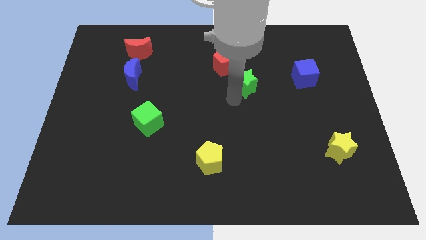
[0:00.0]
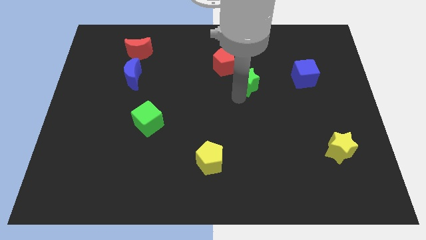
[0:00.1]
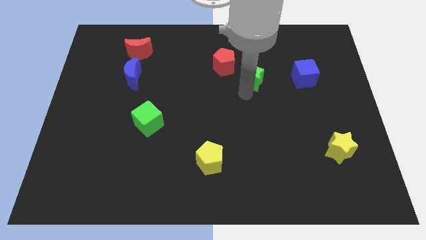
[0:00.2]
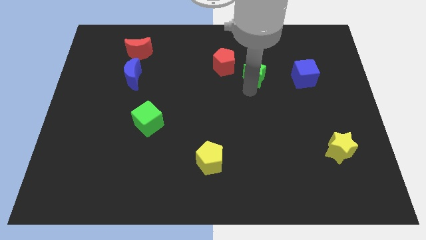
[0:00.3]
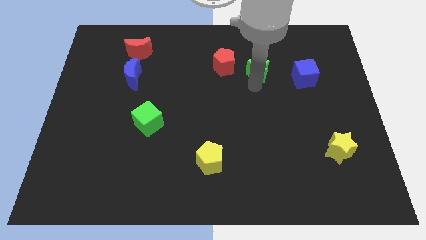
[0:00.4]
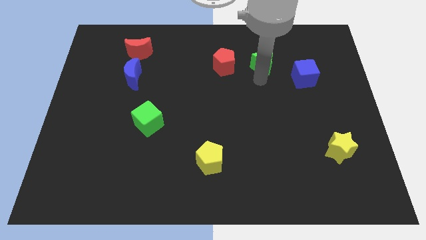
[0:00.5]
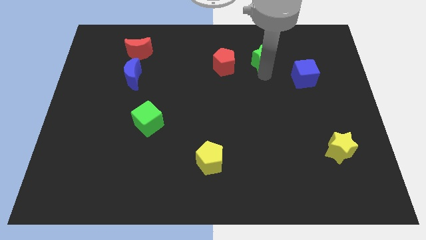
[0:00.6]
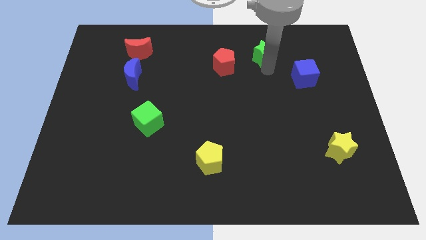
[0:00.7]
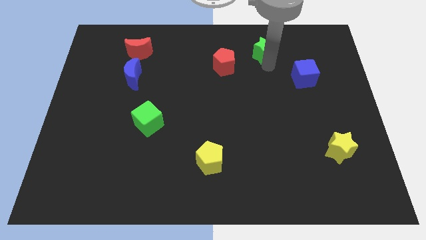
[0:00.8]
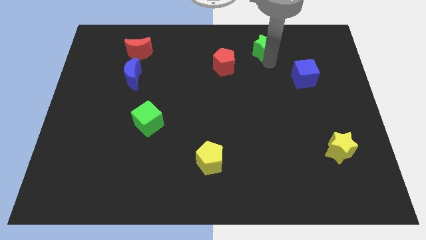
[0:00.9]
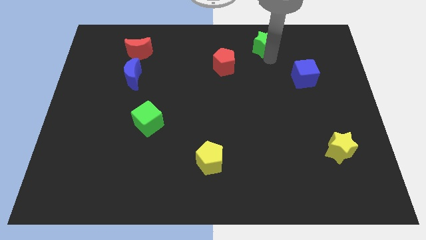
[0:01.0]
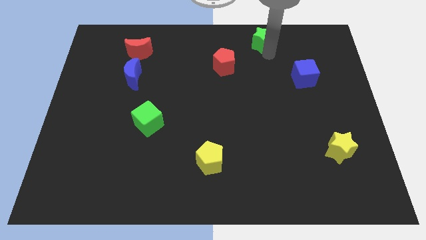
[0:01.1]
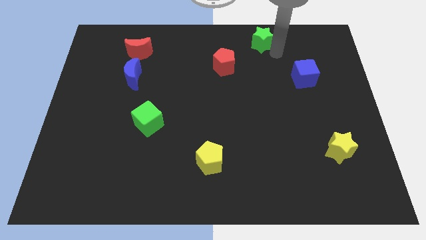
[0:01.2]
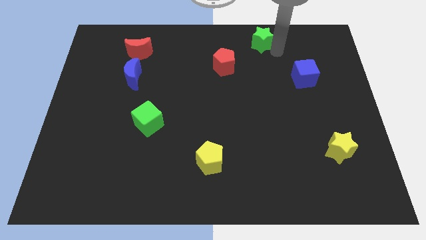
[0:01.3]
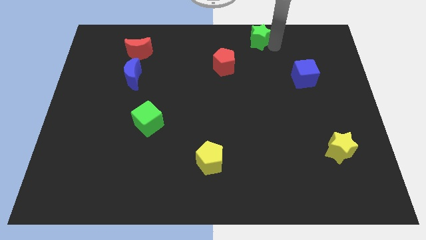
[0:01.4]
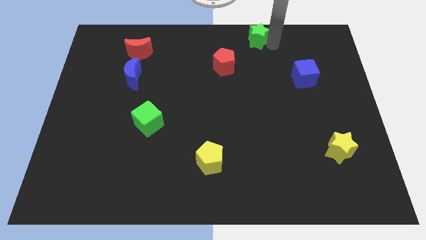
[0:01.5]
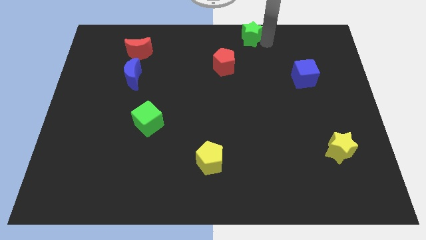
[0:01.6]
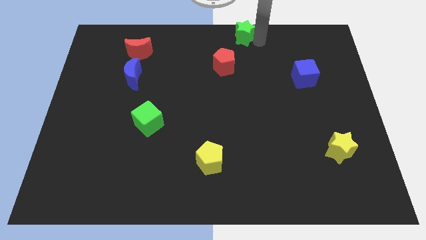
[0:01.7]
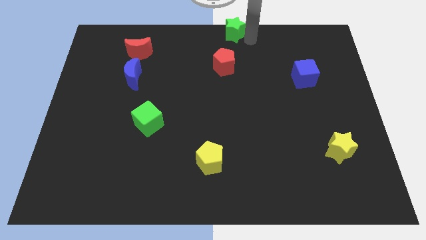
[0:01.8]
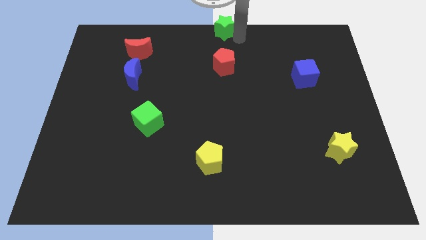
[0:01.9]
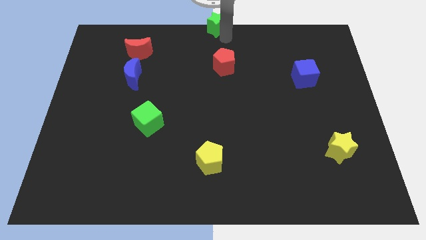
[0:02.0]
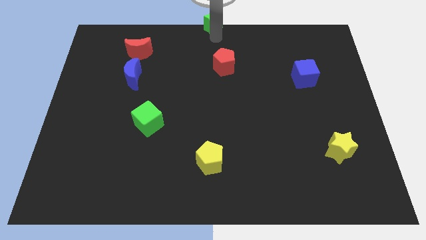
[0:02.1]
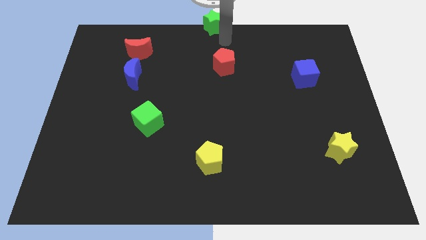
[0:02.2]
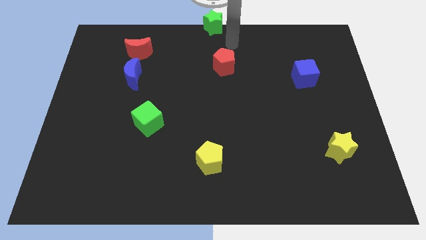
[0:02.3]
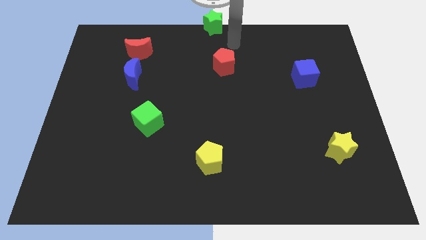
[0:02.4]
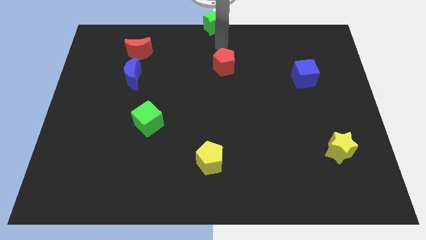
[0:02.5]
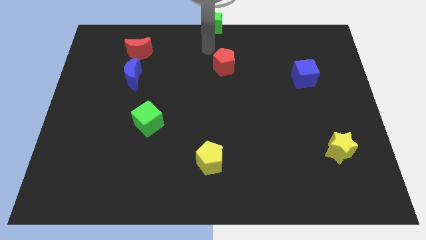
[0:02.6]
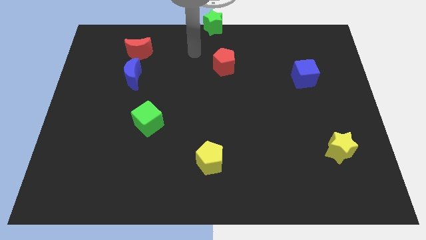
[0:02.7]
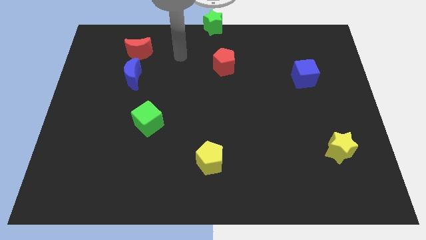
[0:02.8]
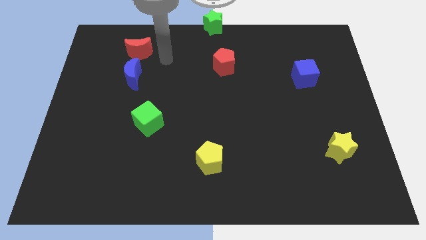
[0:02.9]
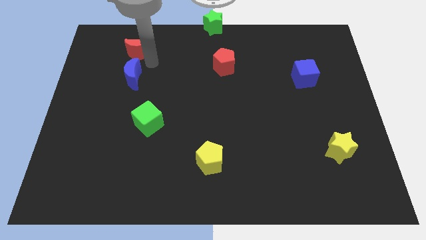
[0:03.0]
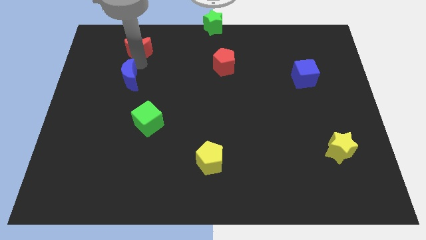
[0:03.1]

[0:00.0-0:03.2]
slide the green star to the top centre of the board

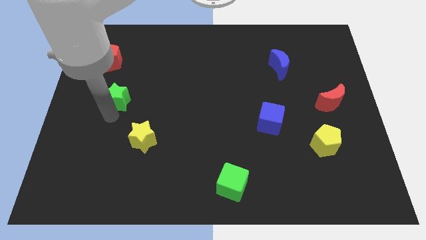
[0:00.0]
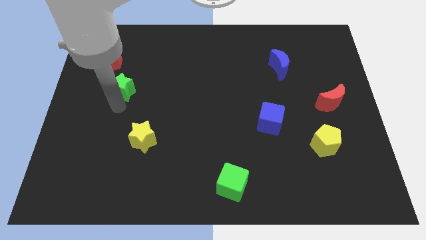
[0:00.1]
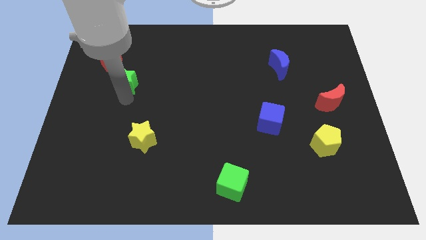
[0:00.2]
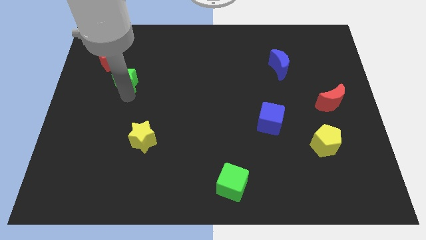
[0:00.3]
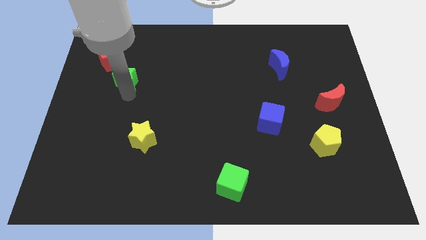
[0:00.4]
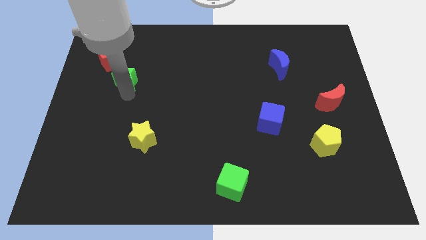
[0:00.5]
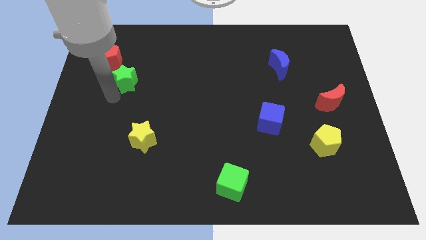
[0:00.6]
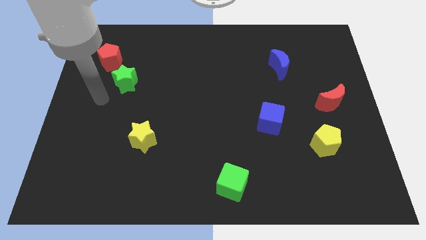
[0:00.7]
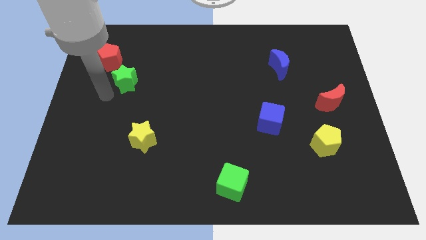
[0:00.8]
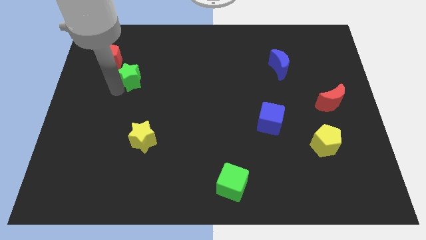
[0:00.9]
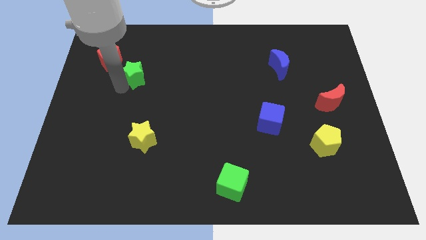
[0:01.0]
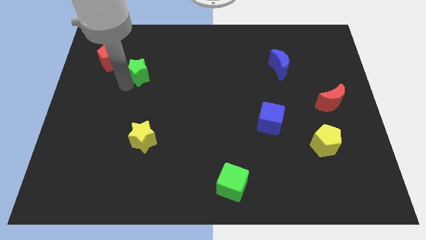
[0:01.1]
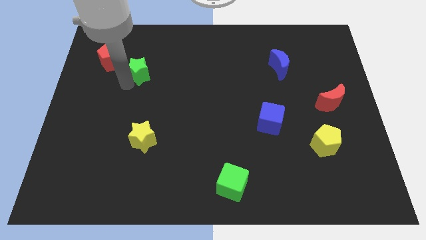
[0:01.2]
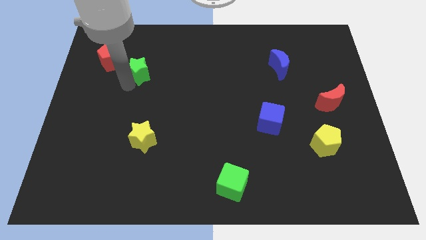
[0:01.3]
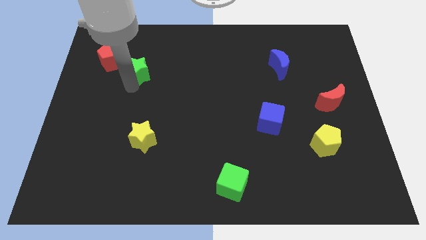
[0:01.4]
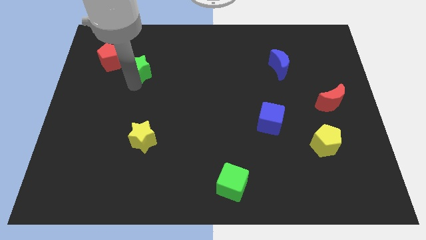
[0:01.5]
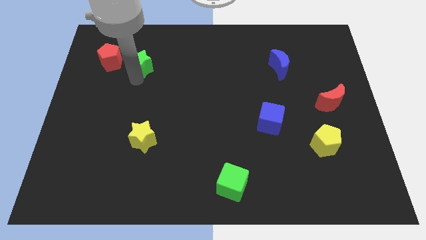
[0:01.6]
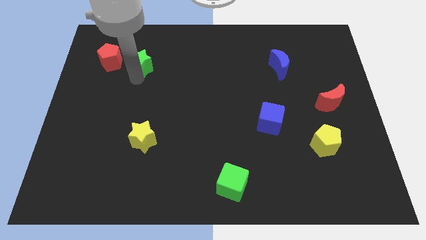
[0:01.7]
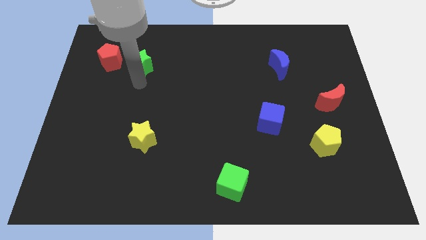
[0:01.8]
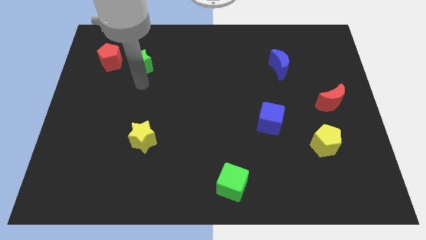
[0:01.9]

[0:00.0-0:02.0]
place a green star close to the red pentagon

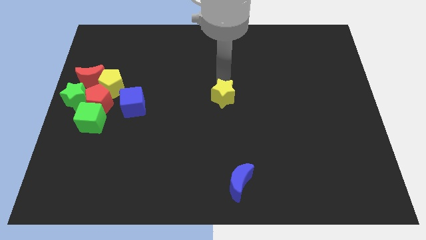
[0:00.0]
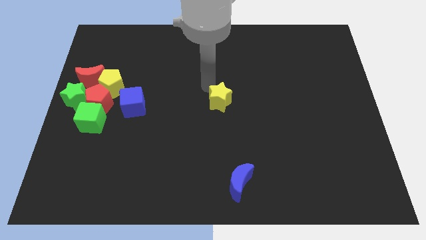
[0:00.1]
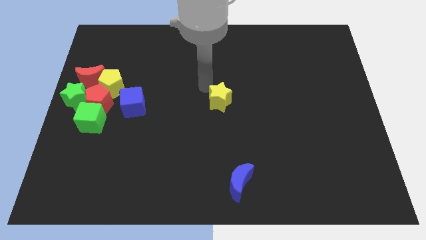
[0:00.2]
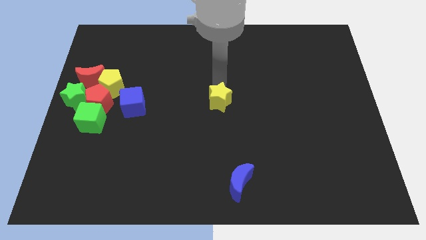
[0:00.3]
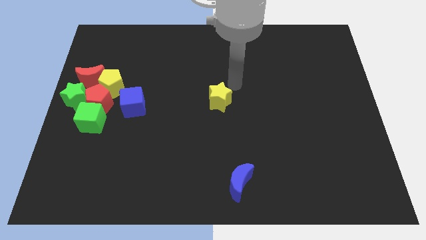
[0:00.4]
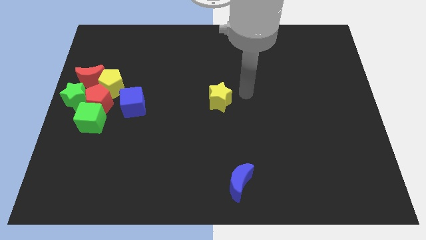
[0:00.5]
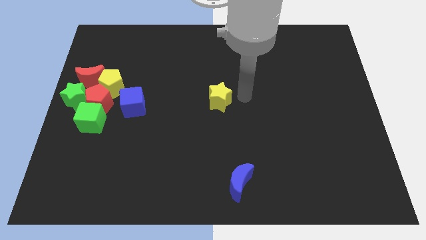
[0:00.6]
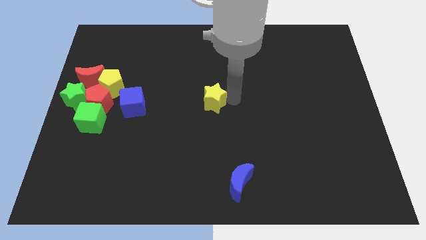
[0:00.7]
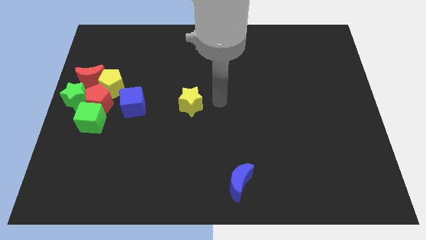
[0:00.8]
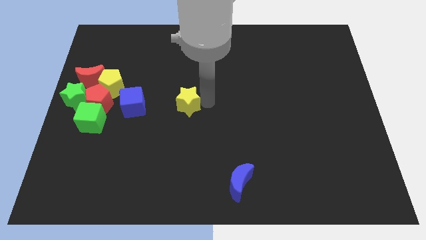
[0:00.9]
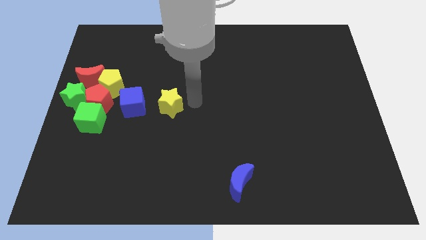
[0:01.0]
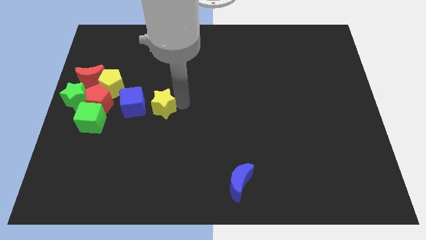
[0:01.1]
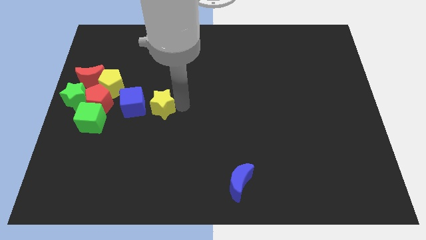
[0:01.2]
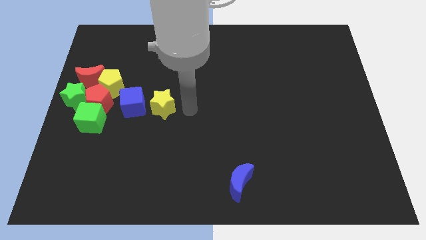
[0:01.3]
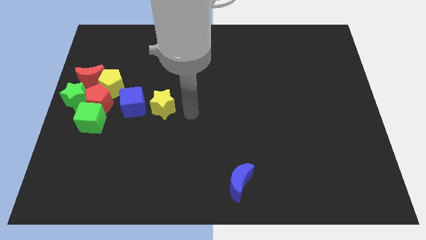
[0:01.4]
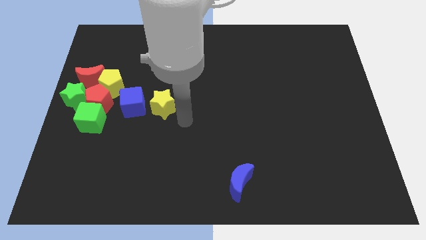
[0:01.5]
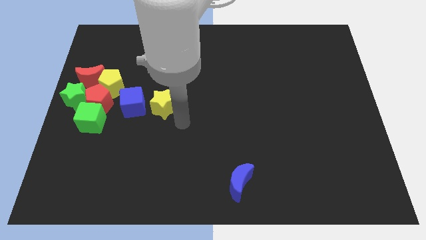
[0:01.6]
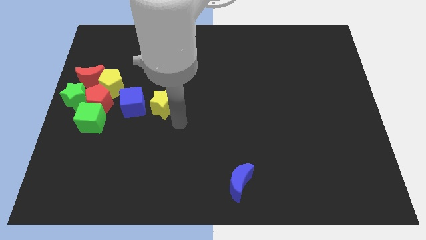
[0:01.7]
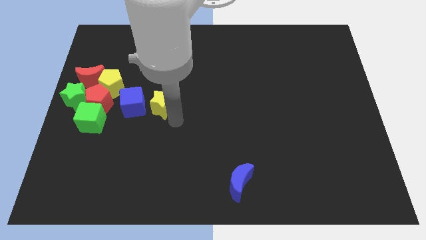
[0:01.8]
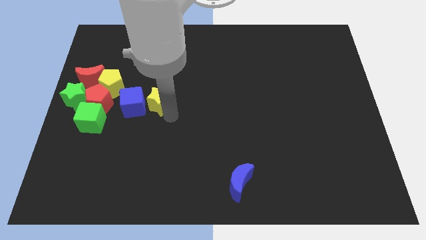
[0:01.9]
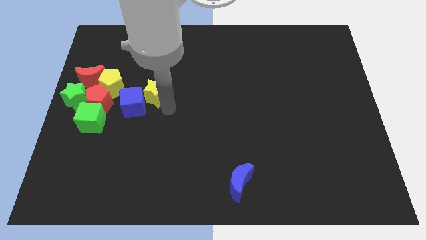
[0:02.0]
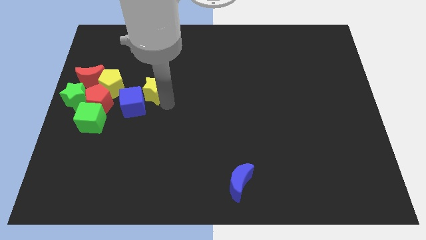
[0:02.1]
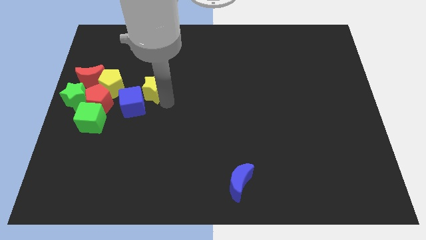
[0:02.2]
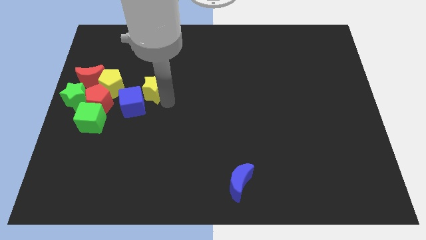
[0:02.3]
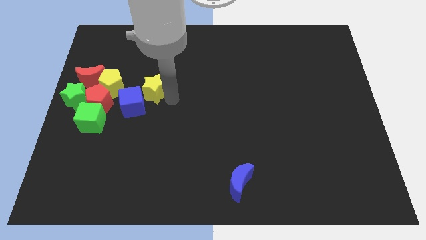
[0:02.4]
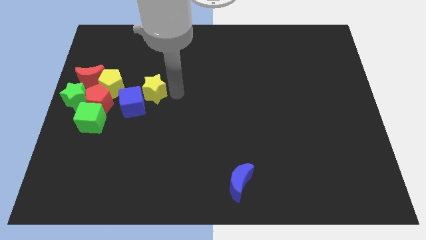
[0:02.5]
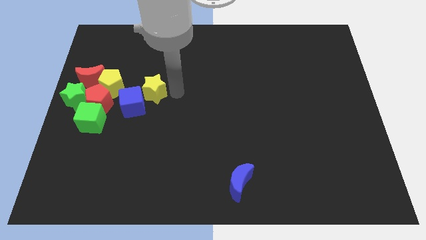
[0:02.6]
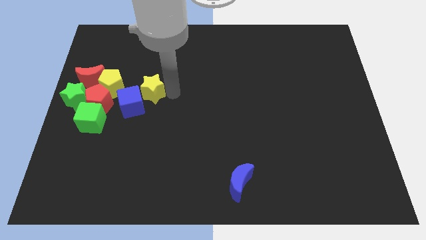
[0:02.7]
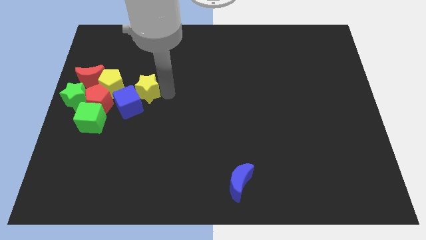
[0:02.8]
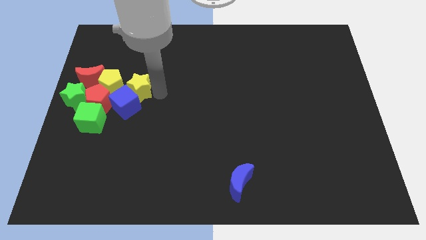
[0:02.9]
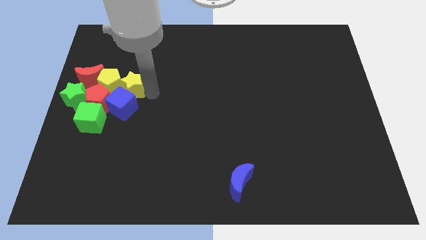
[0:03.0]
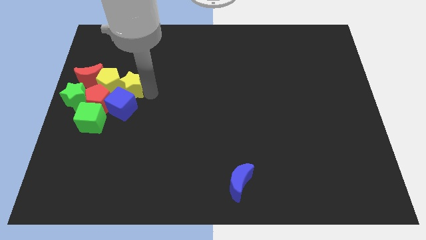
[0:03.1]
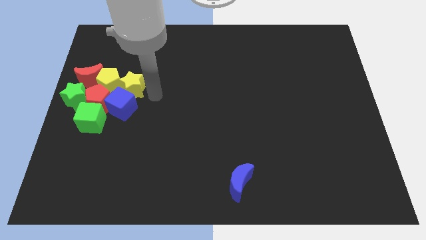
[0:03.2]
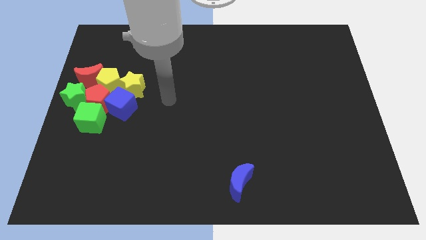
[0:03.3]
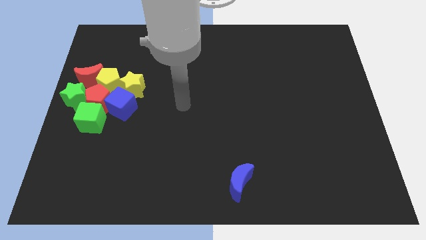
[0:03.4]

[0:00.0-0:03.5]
move the yellow star into the yellow pentagon and blue cube

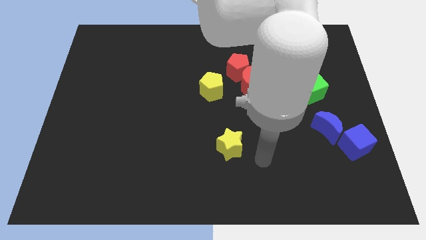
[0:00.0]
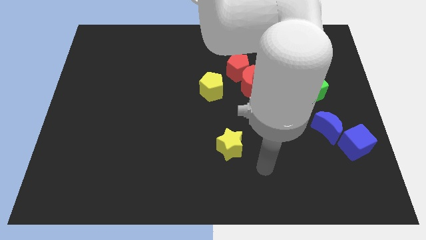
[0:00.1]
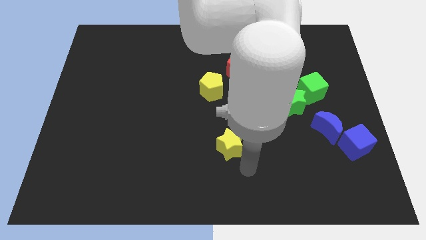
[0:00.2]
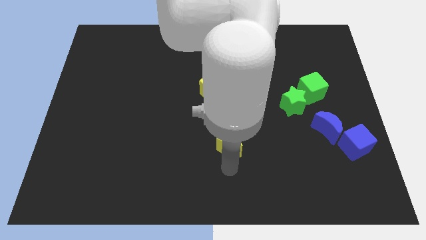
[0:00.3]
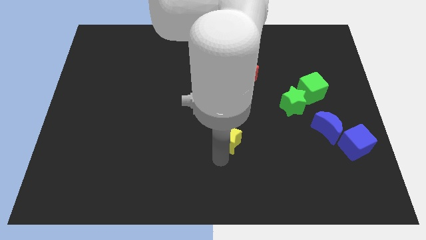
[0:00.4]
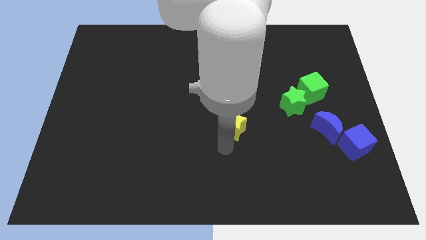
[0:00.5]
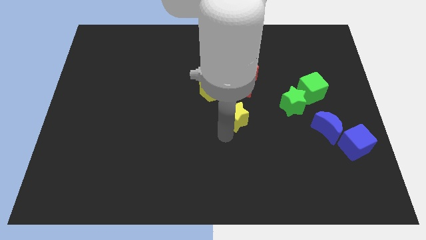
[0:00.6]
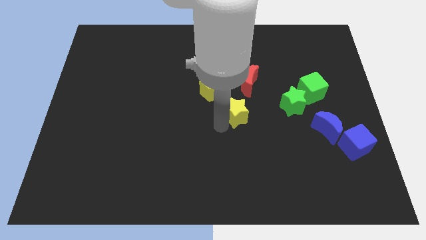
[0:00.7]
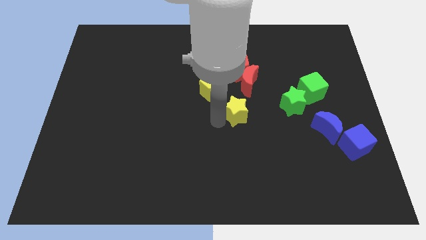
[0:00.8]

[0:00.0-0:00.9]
push the yellow star upwards below the red crescent
